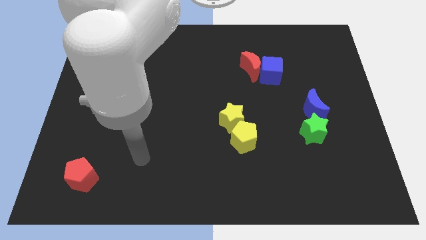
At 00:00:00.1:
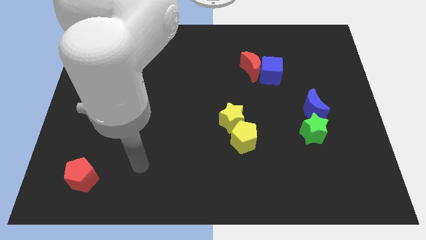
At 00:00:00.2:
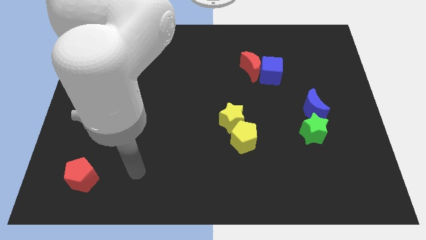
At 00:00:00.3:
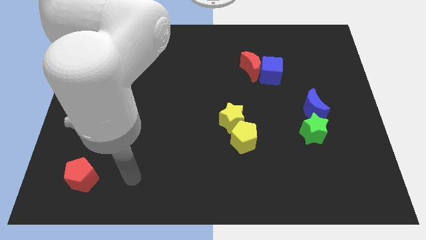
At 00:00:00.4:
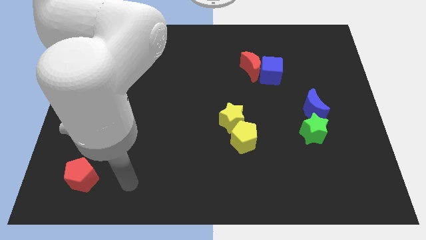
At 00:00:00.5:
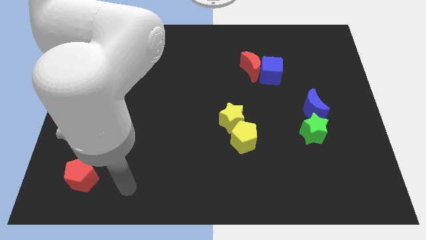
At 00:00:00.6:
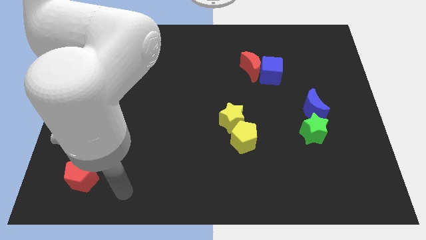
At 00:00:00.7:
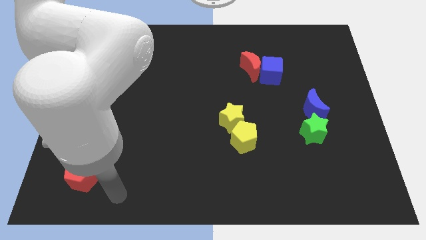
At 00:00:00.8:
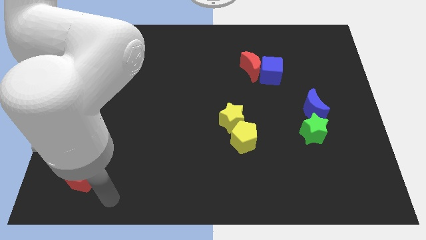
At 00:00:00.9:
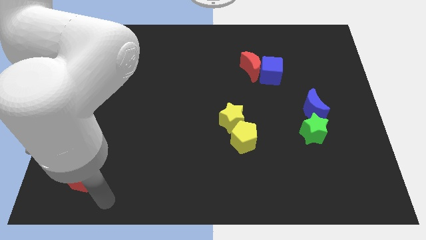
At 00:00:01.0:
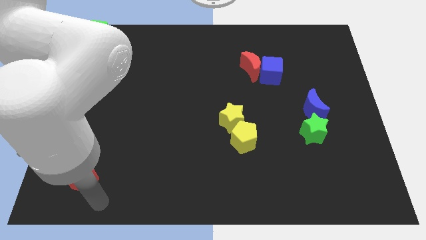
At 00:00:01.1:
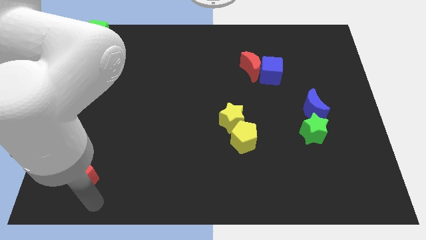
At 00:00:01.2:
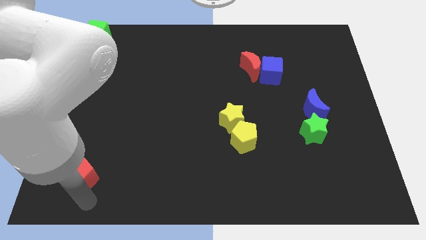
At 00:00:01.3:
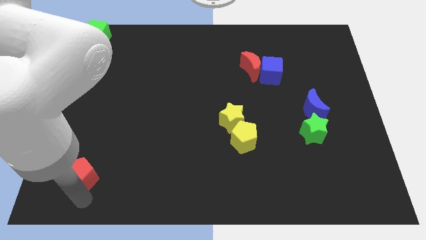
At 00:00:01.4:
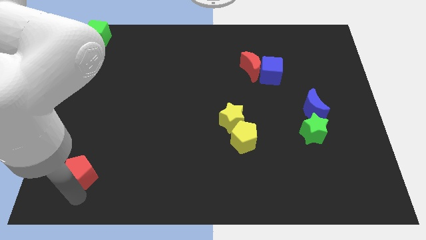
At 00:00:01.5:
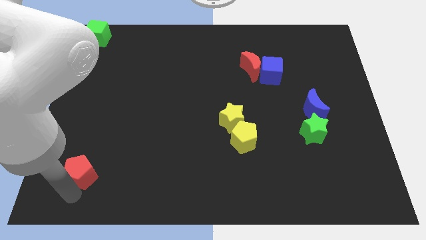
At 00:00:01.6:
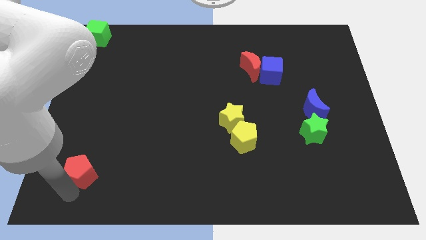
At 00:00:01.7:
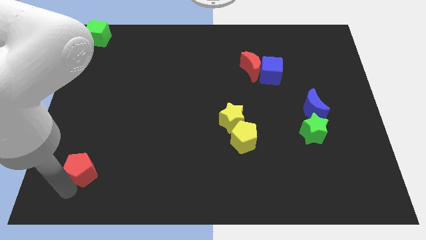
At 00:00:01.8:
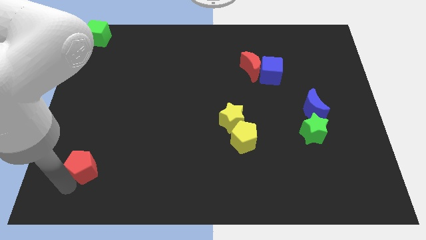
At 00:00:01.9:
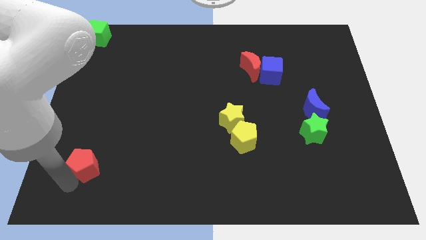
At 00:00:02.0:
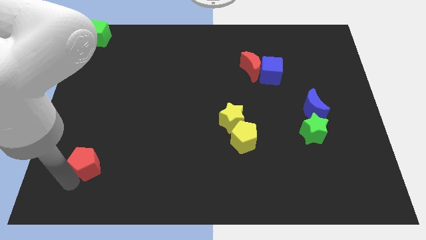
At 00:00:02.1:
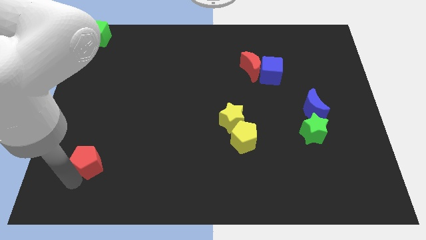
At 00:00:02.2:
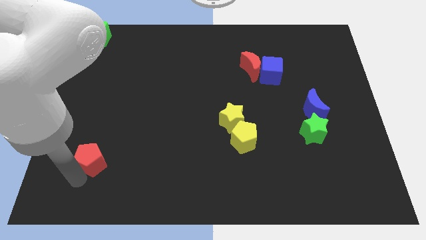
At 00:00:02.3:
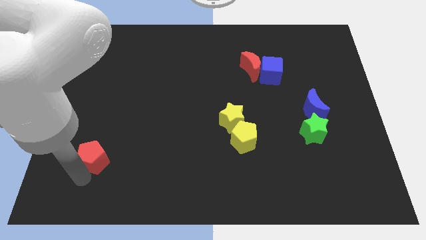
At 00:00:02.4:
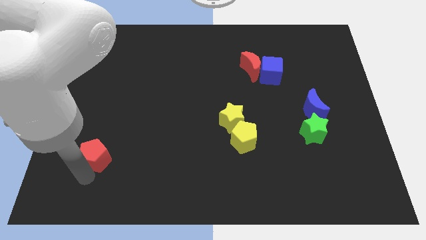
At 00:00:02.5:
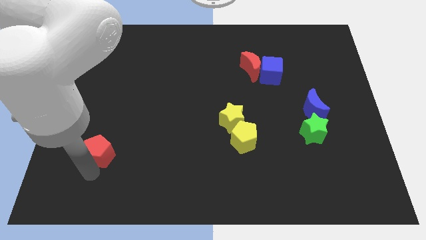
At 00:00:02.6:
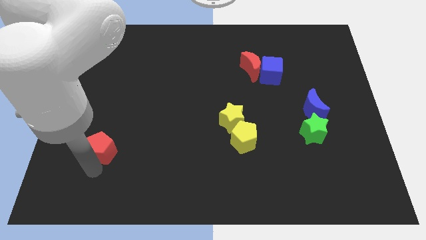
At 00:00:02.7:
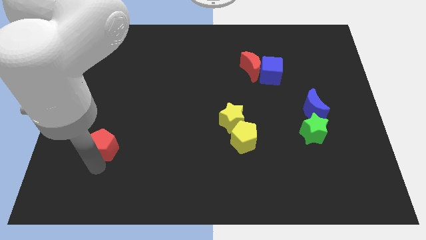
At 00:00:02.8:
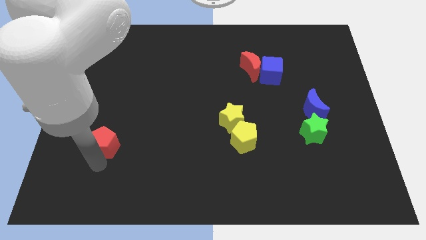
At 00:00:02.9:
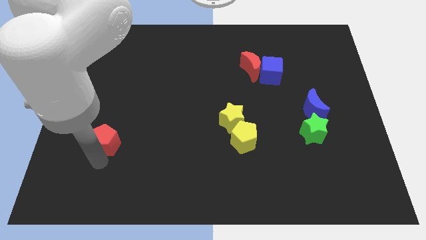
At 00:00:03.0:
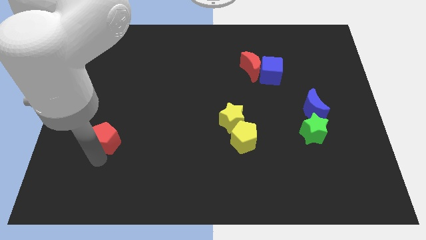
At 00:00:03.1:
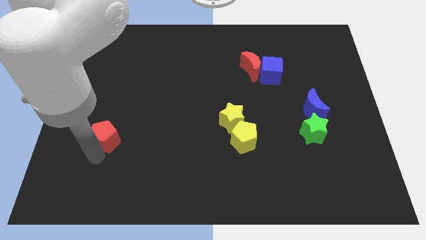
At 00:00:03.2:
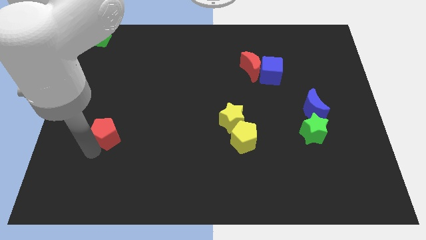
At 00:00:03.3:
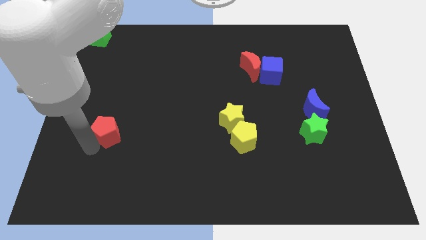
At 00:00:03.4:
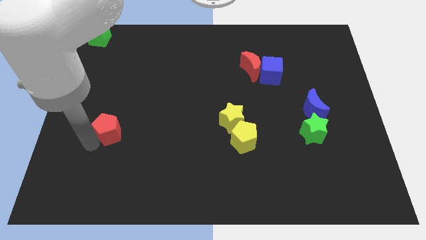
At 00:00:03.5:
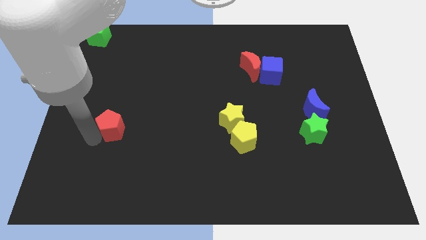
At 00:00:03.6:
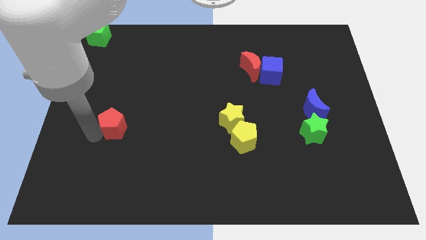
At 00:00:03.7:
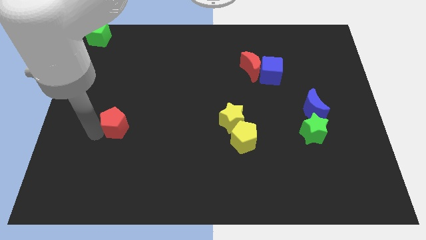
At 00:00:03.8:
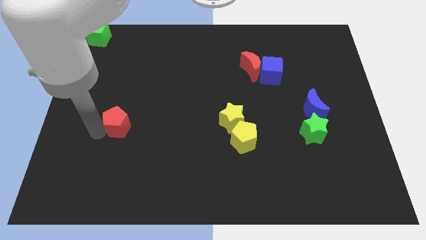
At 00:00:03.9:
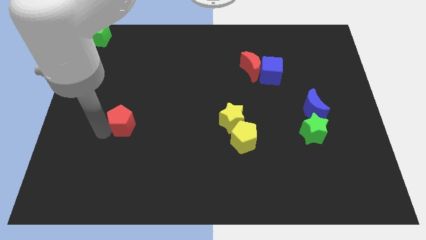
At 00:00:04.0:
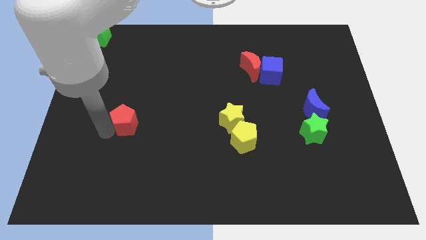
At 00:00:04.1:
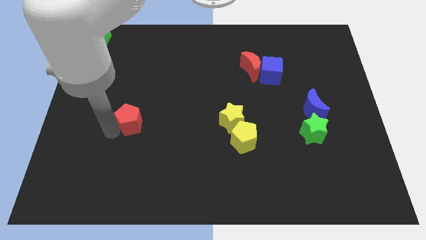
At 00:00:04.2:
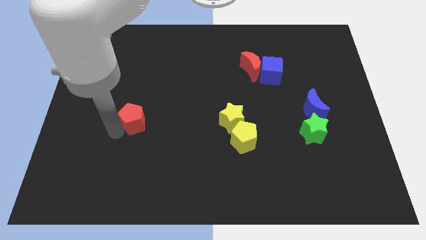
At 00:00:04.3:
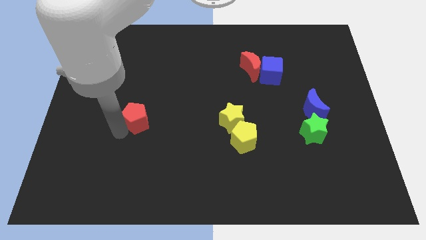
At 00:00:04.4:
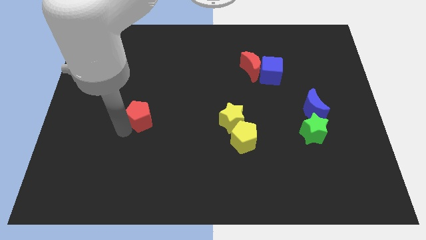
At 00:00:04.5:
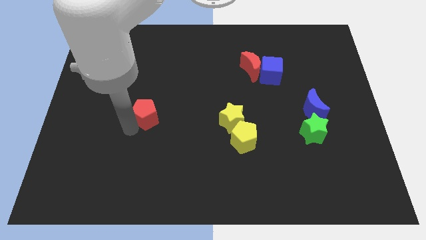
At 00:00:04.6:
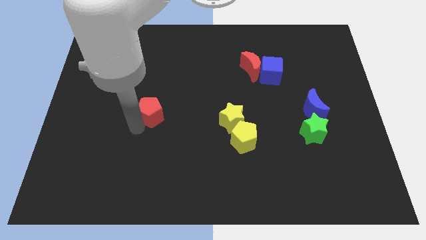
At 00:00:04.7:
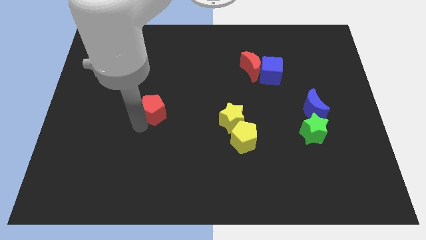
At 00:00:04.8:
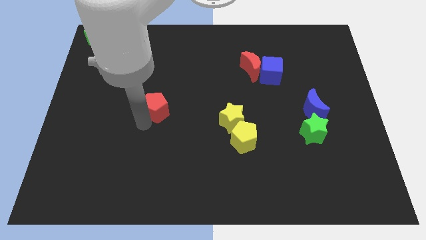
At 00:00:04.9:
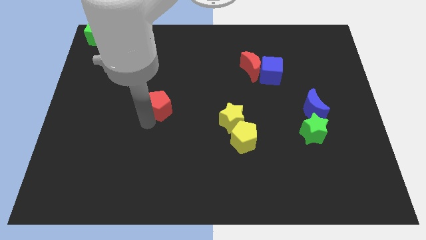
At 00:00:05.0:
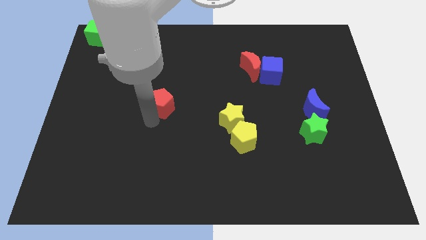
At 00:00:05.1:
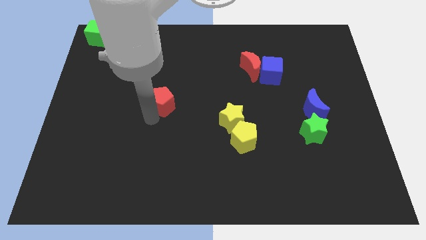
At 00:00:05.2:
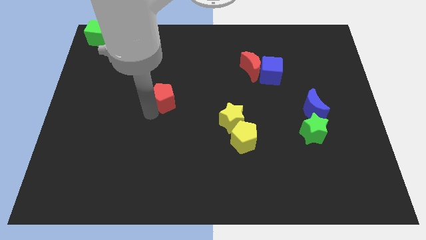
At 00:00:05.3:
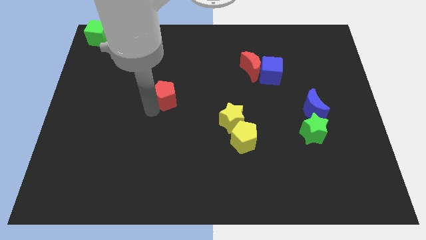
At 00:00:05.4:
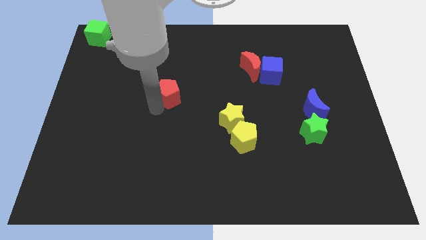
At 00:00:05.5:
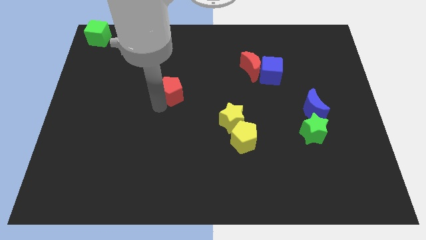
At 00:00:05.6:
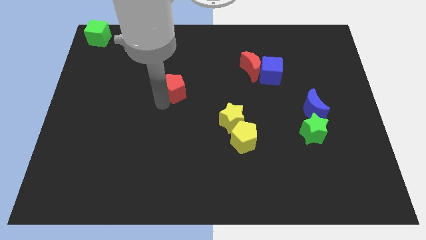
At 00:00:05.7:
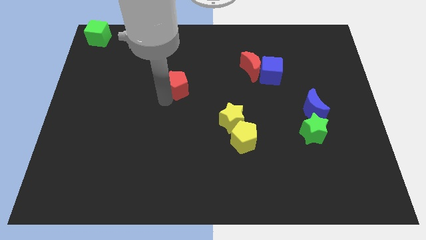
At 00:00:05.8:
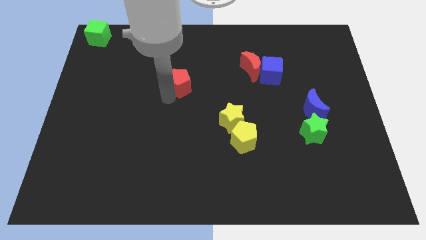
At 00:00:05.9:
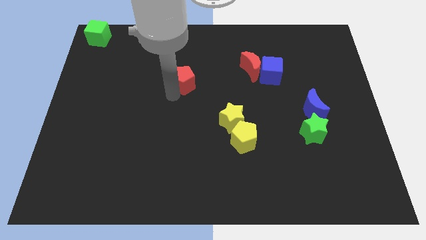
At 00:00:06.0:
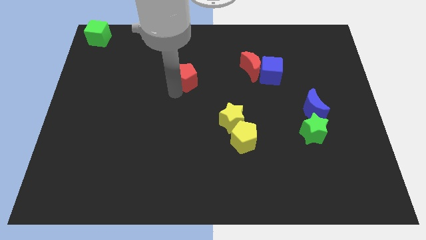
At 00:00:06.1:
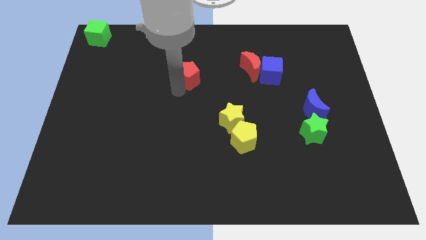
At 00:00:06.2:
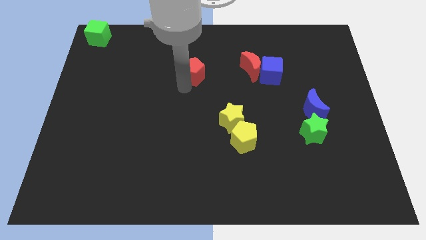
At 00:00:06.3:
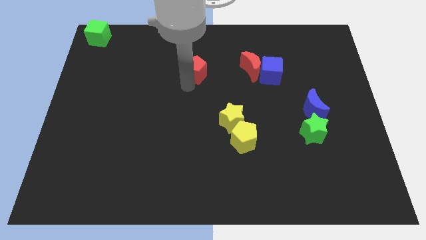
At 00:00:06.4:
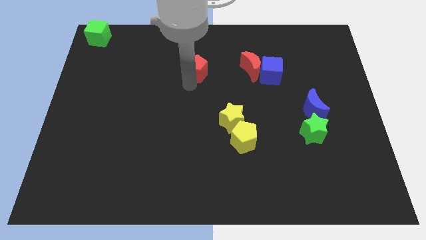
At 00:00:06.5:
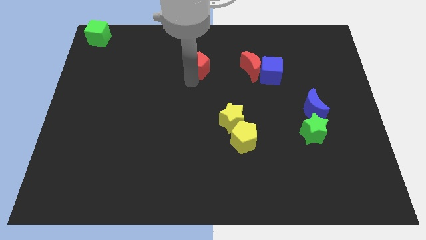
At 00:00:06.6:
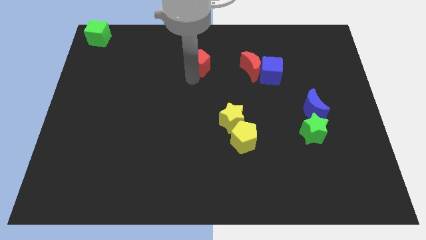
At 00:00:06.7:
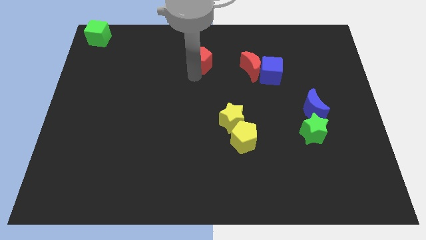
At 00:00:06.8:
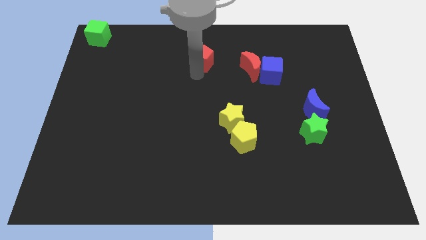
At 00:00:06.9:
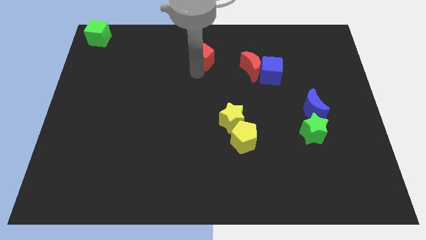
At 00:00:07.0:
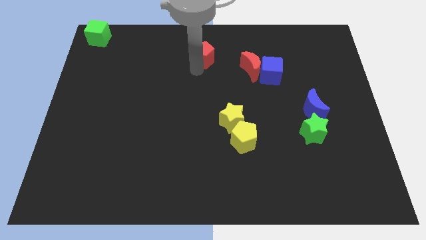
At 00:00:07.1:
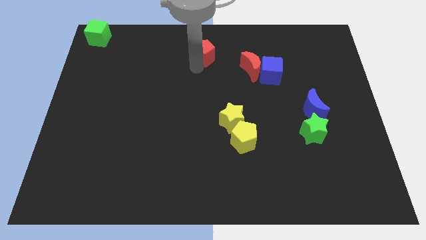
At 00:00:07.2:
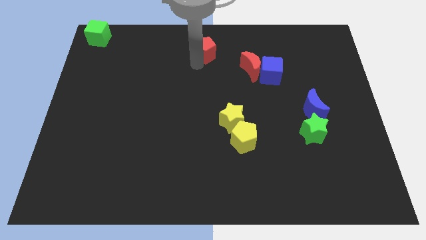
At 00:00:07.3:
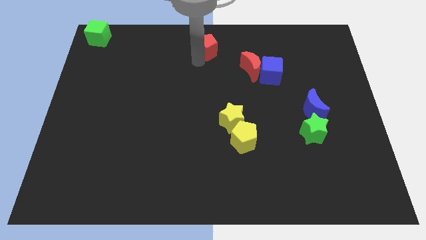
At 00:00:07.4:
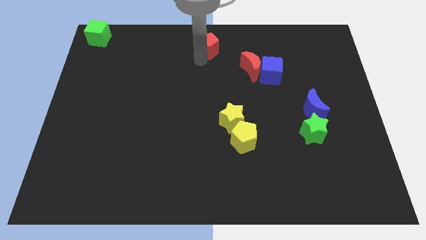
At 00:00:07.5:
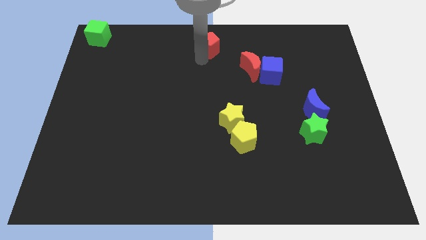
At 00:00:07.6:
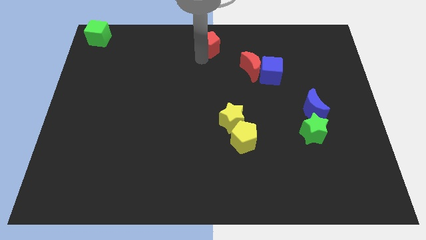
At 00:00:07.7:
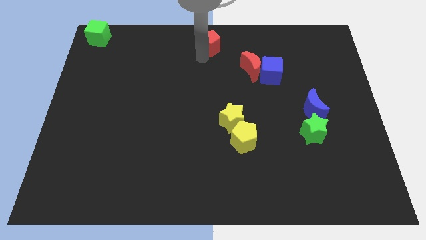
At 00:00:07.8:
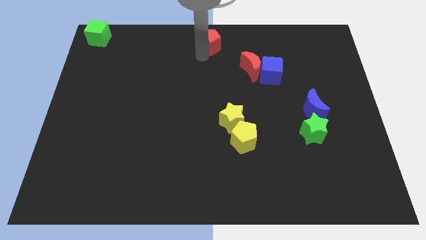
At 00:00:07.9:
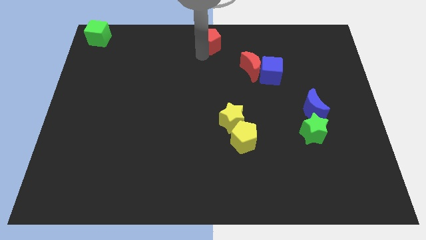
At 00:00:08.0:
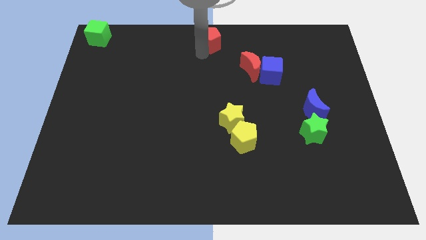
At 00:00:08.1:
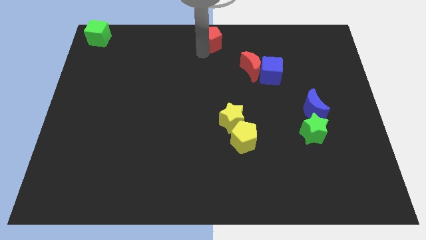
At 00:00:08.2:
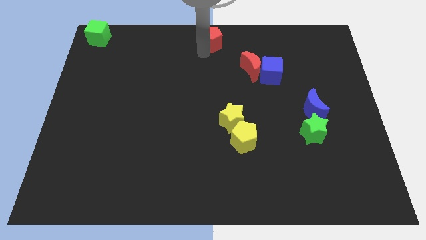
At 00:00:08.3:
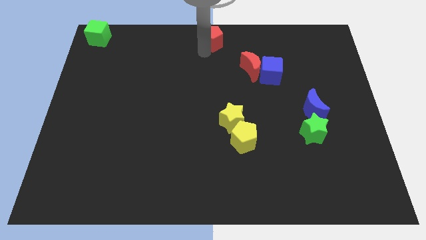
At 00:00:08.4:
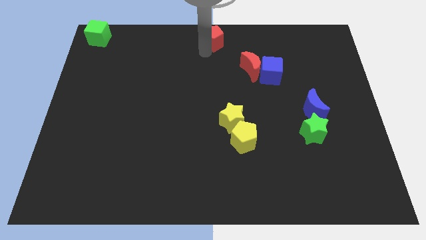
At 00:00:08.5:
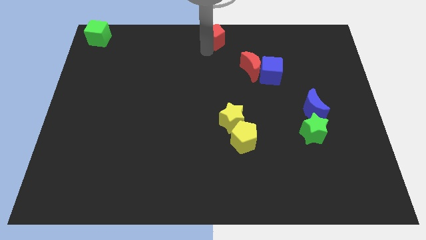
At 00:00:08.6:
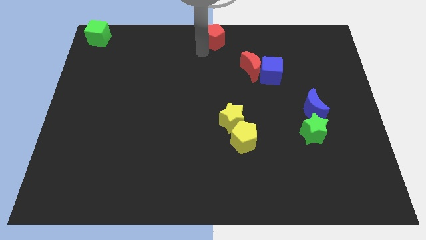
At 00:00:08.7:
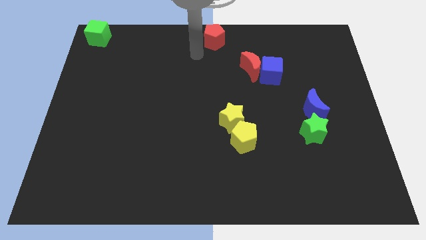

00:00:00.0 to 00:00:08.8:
move the red pentagon to the top center
